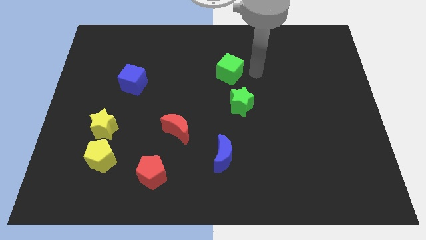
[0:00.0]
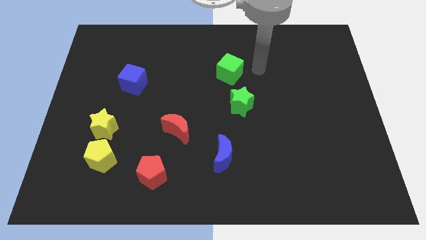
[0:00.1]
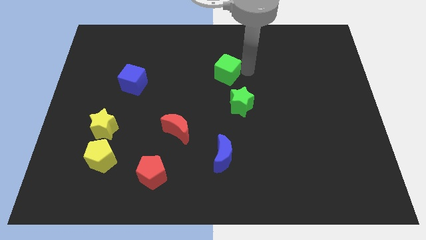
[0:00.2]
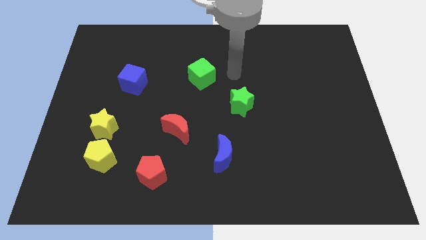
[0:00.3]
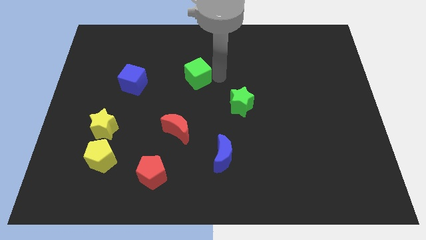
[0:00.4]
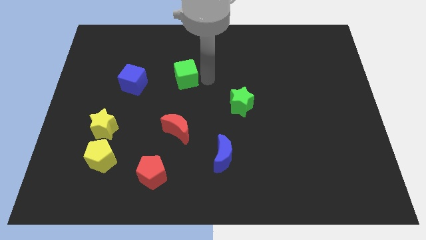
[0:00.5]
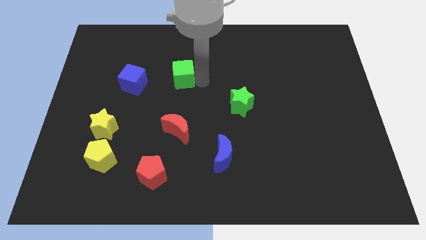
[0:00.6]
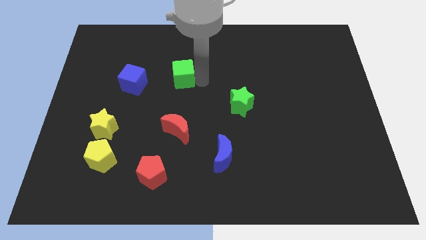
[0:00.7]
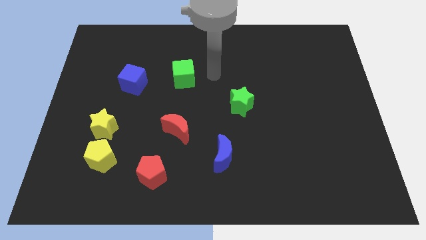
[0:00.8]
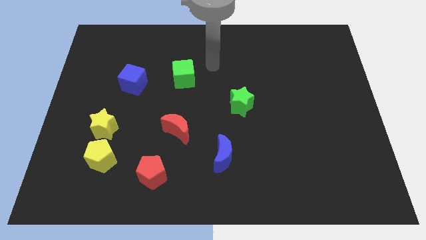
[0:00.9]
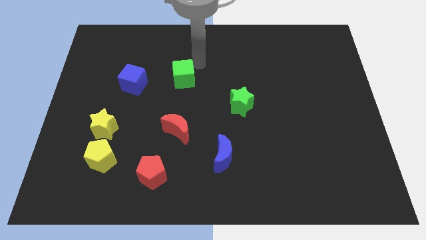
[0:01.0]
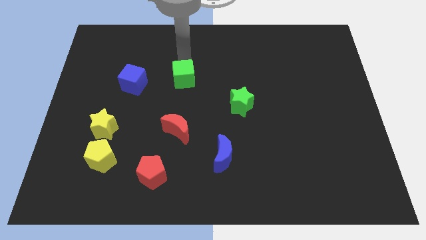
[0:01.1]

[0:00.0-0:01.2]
move the green cube vertically above the red moon

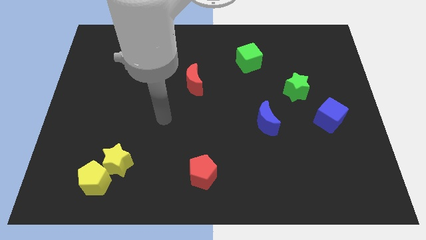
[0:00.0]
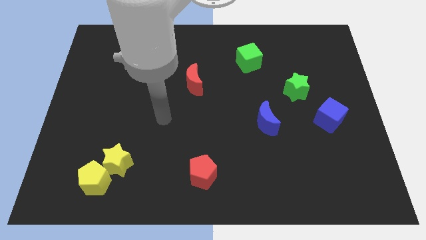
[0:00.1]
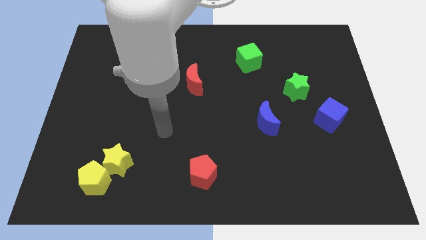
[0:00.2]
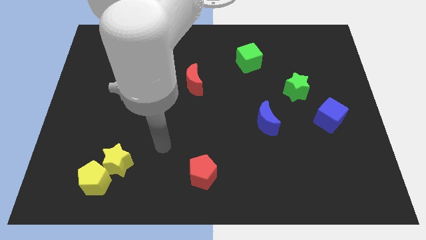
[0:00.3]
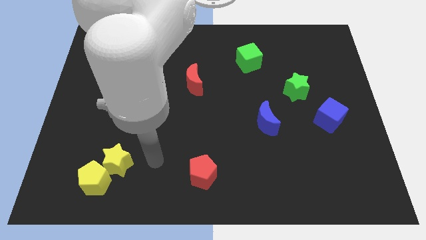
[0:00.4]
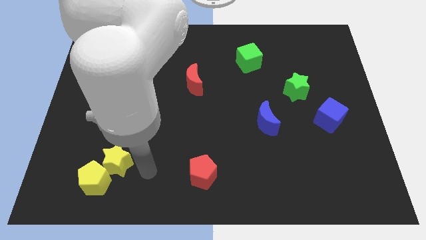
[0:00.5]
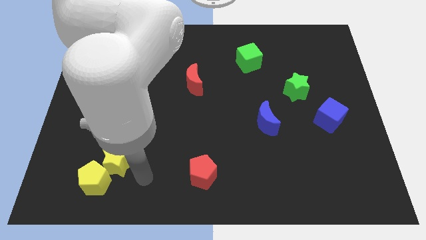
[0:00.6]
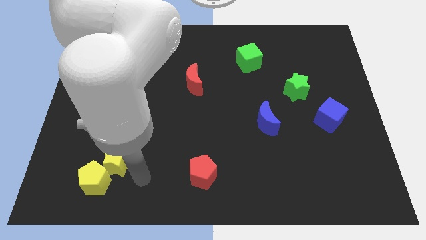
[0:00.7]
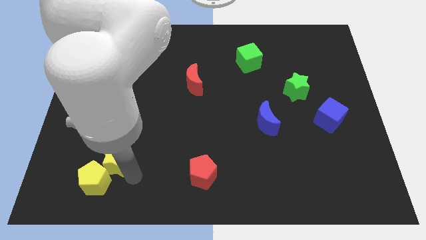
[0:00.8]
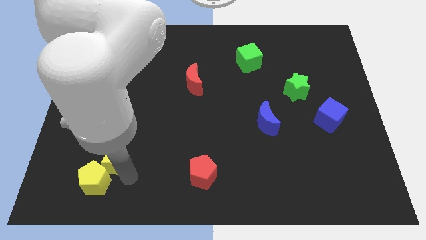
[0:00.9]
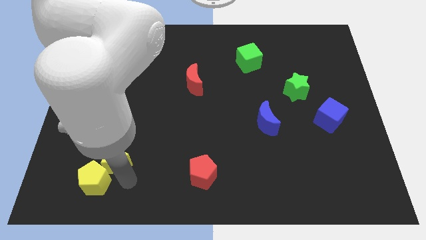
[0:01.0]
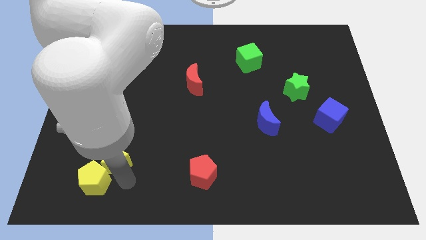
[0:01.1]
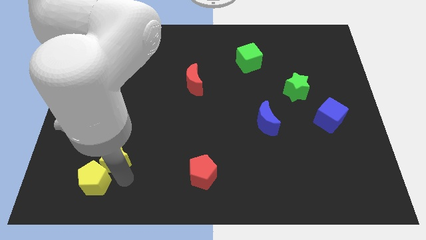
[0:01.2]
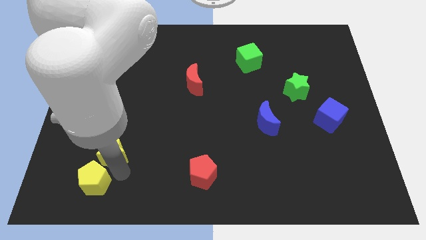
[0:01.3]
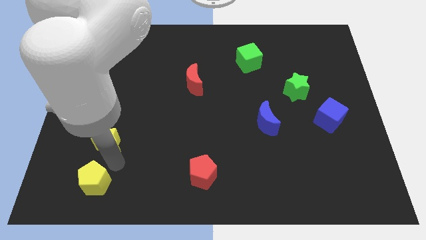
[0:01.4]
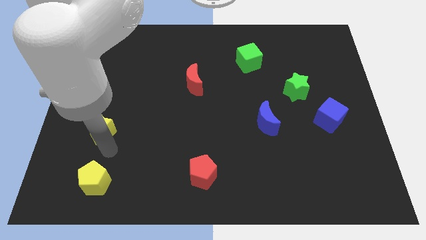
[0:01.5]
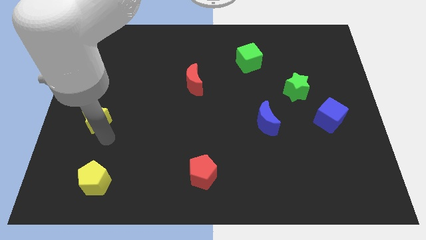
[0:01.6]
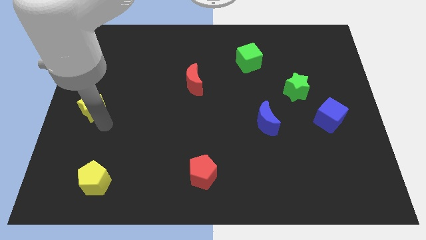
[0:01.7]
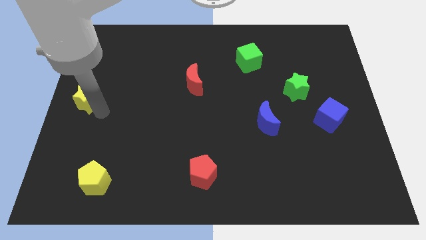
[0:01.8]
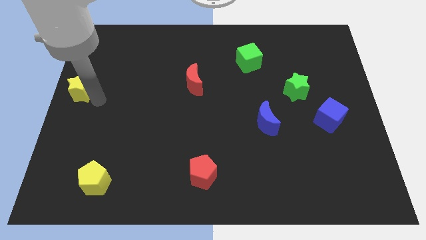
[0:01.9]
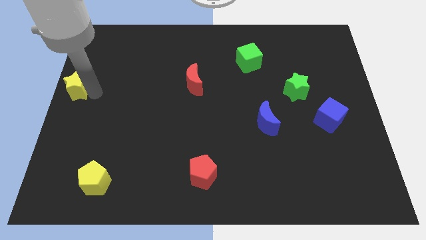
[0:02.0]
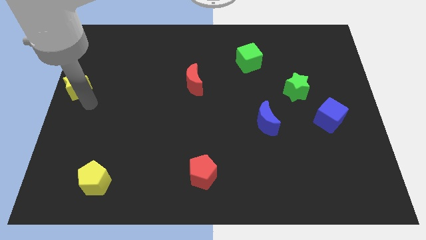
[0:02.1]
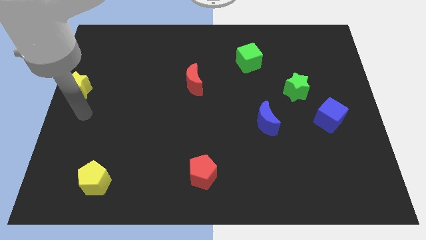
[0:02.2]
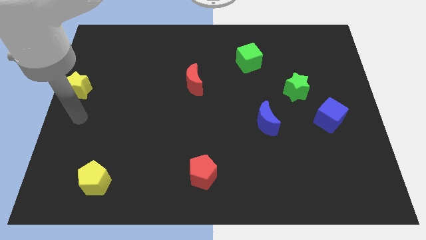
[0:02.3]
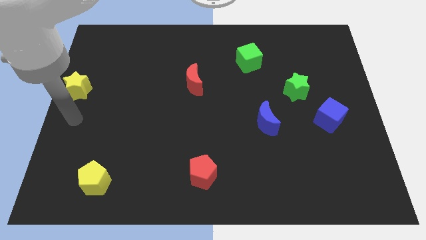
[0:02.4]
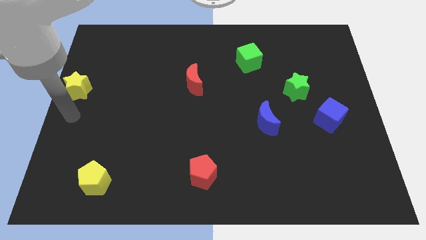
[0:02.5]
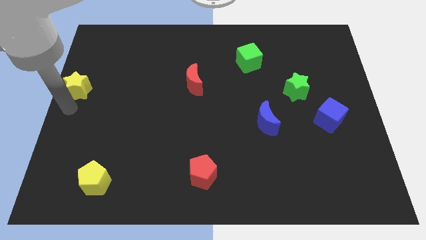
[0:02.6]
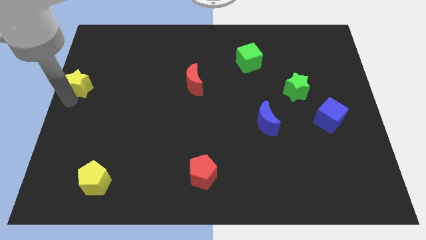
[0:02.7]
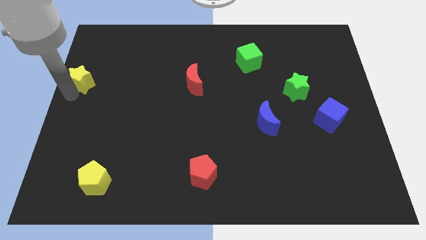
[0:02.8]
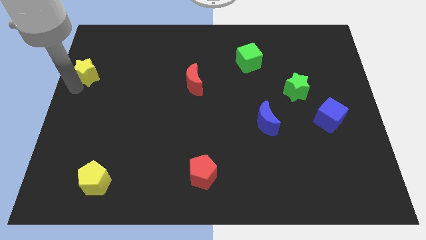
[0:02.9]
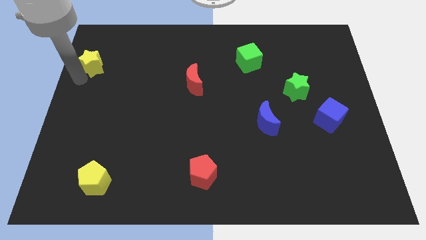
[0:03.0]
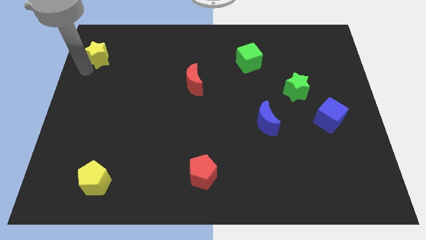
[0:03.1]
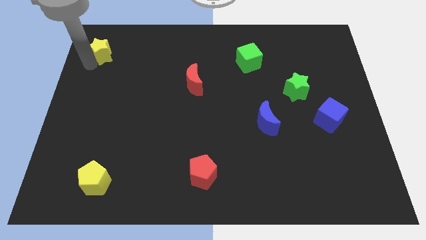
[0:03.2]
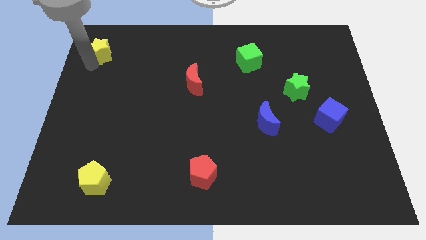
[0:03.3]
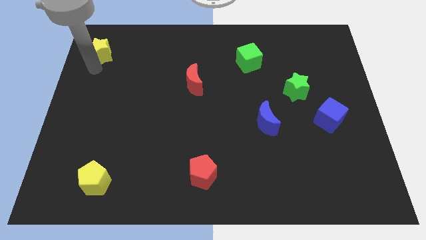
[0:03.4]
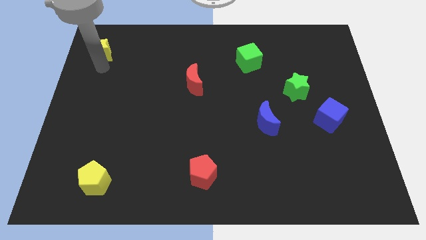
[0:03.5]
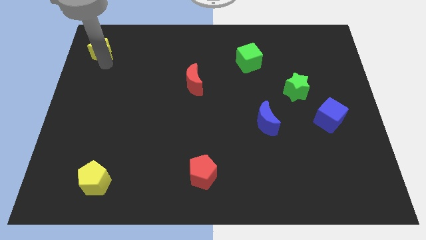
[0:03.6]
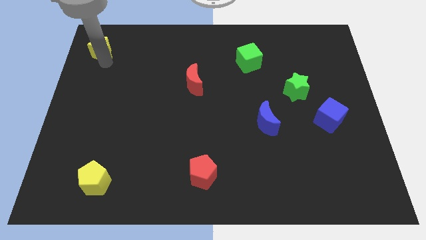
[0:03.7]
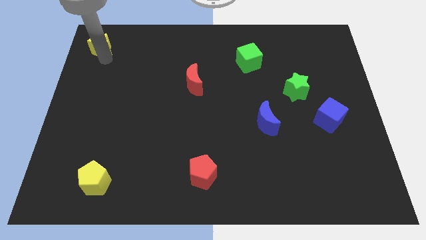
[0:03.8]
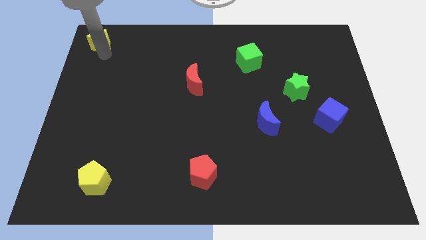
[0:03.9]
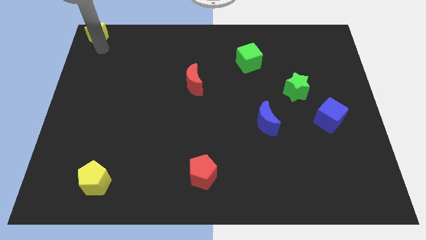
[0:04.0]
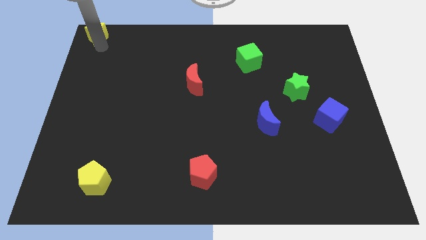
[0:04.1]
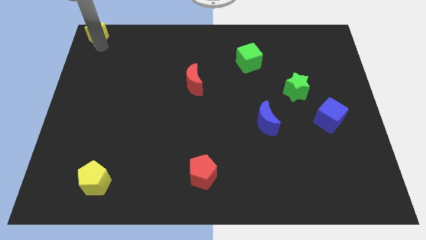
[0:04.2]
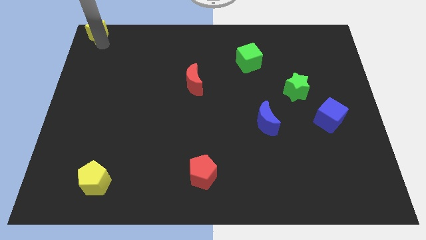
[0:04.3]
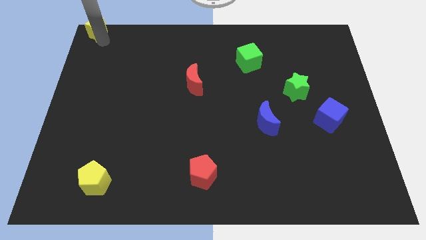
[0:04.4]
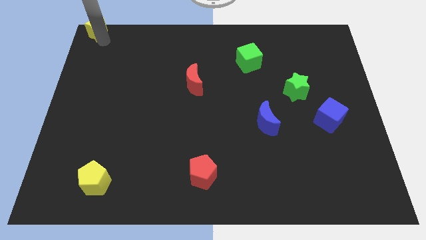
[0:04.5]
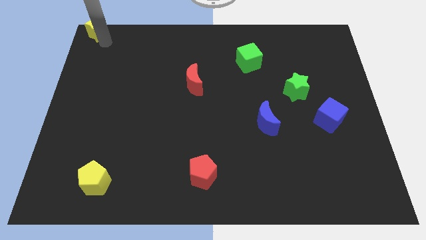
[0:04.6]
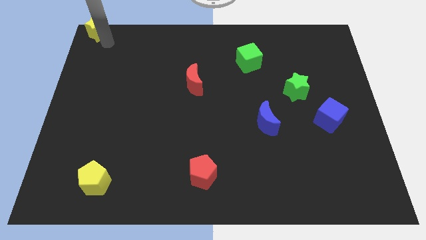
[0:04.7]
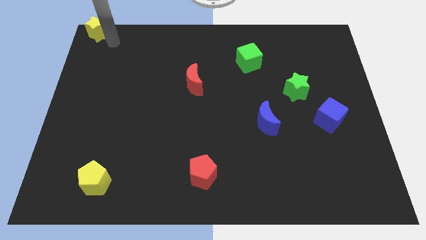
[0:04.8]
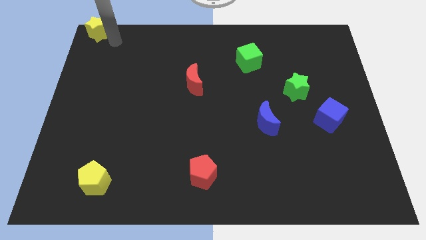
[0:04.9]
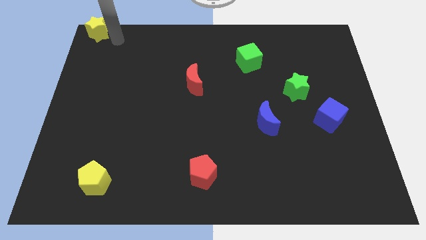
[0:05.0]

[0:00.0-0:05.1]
put the yellow star at the top left corner of the board

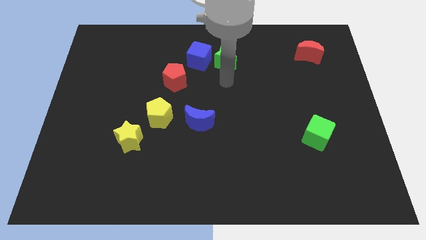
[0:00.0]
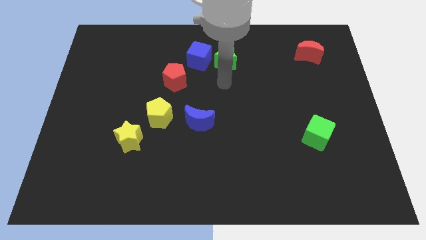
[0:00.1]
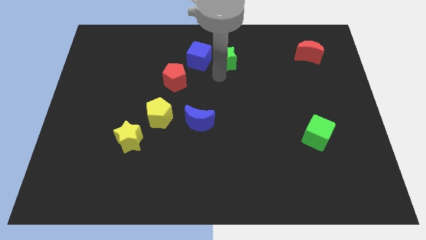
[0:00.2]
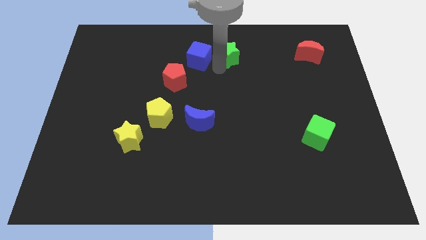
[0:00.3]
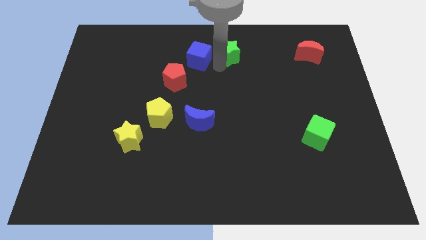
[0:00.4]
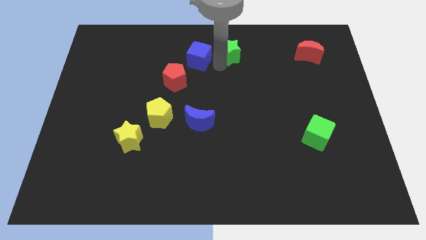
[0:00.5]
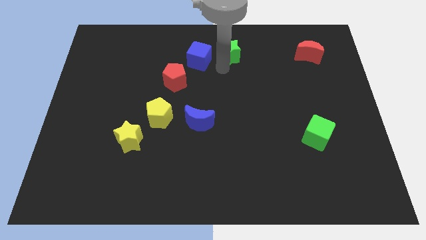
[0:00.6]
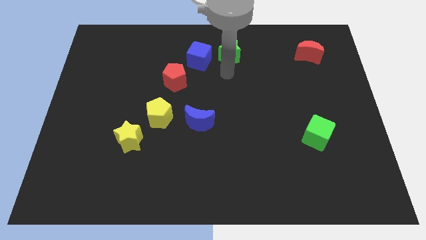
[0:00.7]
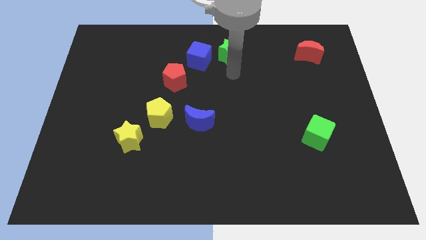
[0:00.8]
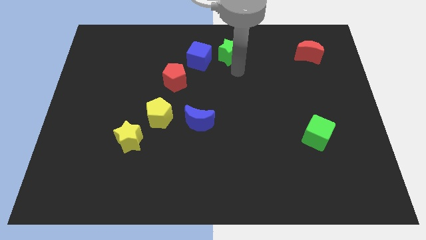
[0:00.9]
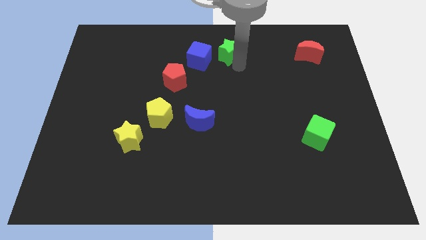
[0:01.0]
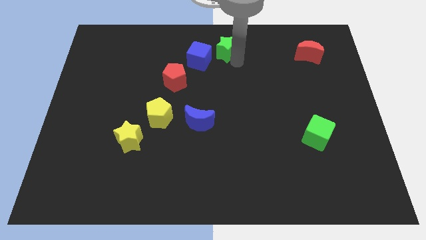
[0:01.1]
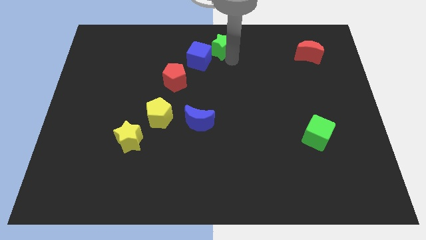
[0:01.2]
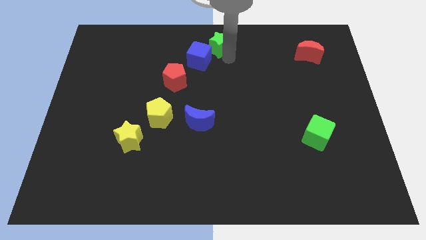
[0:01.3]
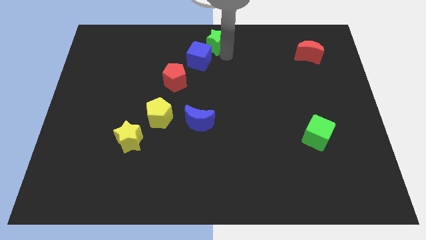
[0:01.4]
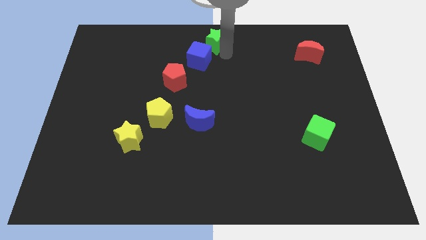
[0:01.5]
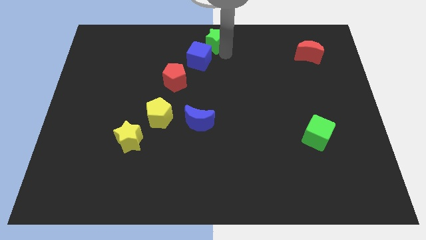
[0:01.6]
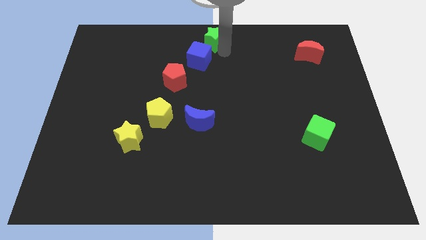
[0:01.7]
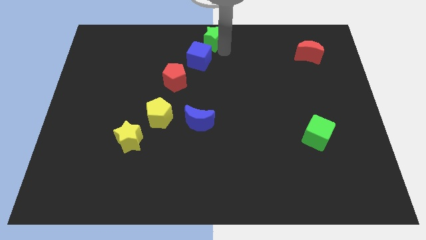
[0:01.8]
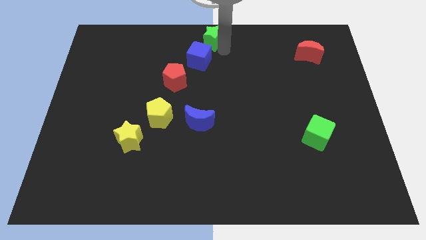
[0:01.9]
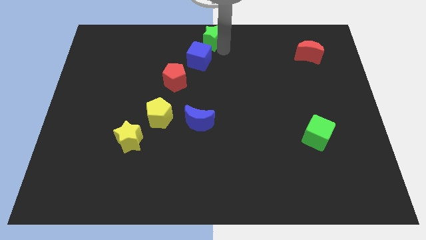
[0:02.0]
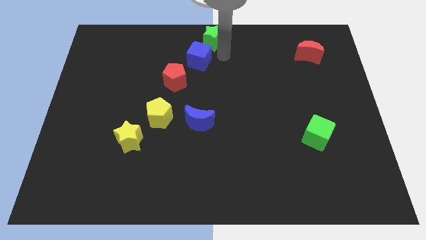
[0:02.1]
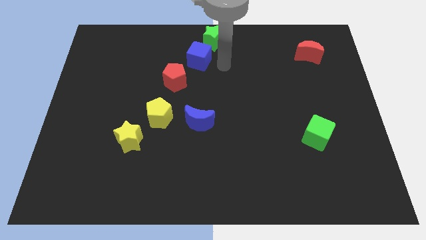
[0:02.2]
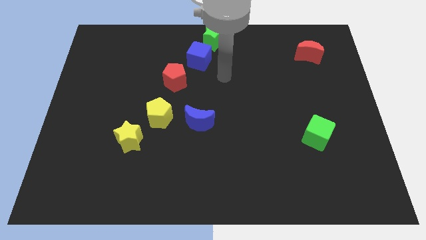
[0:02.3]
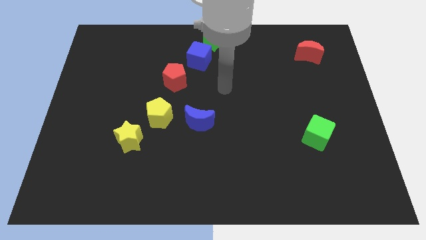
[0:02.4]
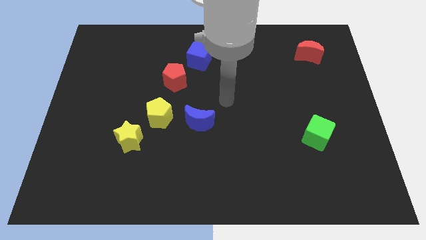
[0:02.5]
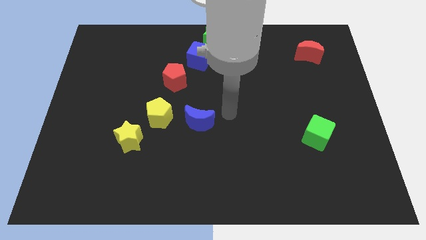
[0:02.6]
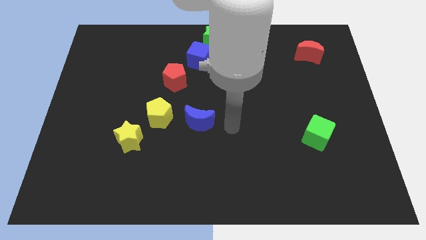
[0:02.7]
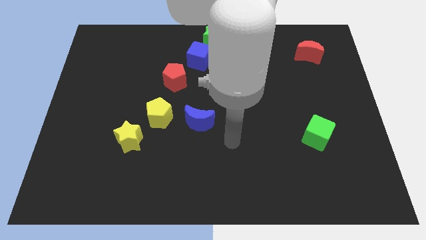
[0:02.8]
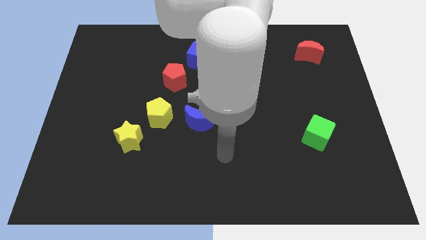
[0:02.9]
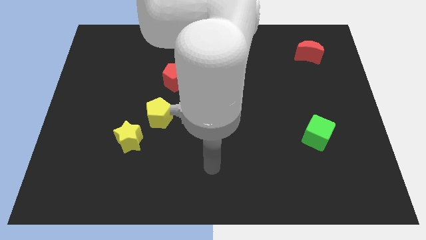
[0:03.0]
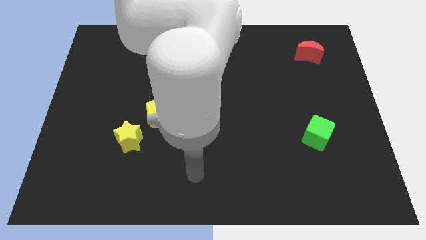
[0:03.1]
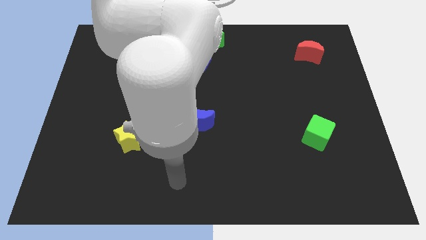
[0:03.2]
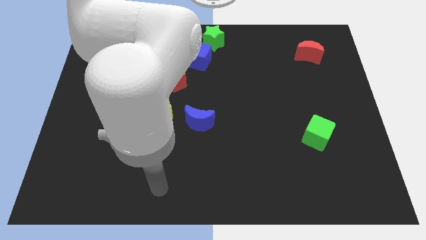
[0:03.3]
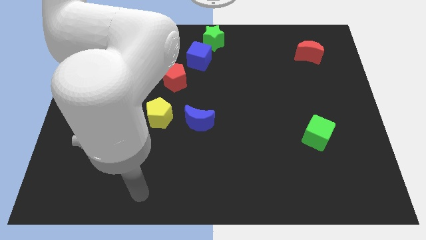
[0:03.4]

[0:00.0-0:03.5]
place the green star at the top center of the board
